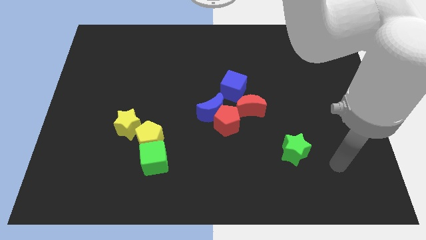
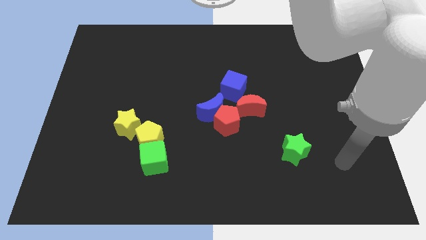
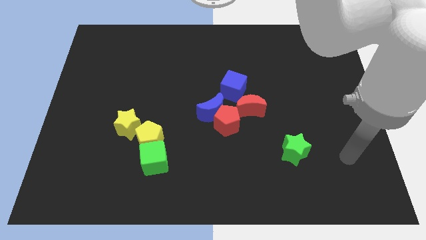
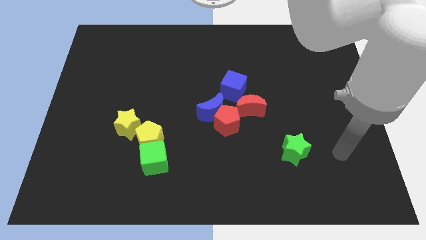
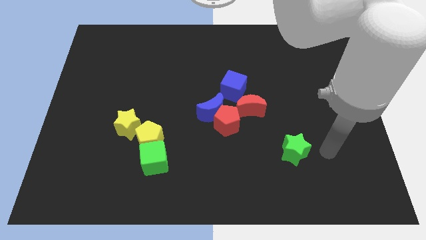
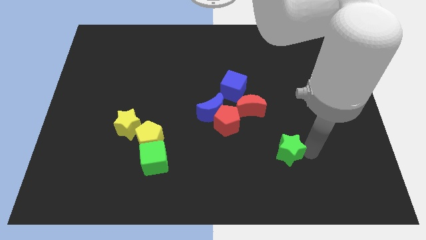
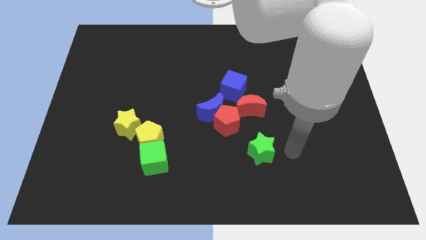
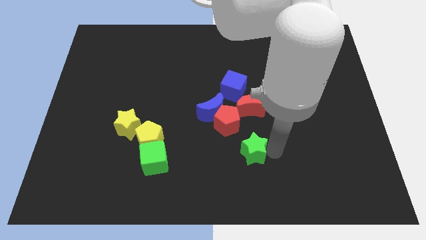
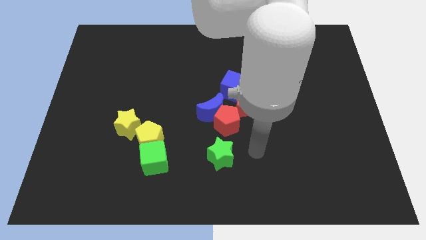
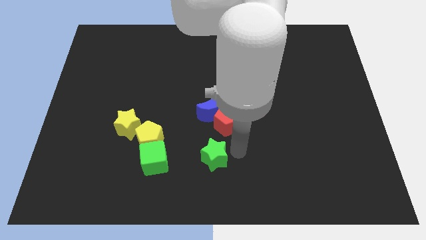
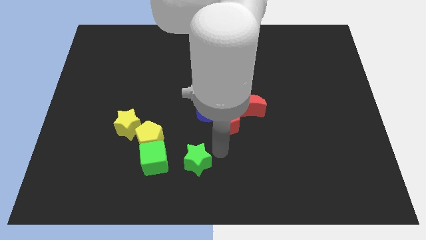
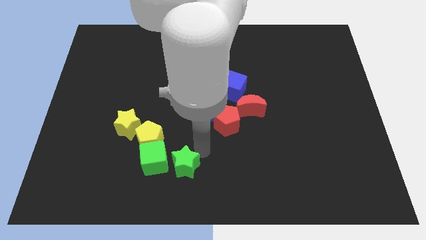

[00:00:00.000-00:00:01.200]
push the green star to the left side of the green cube

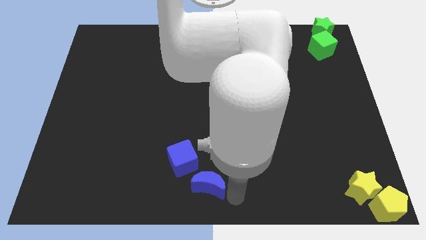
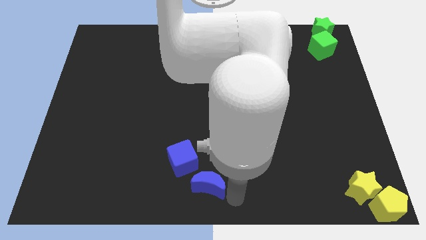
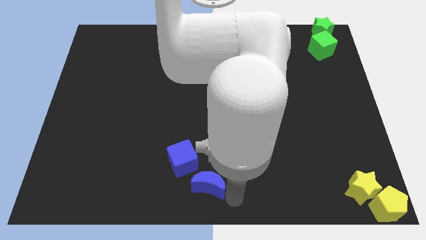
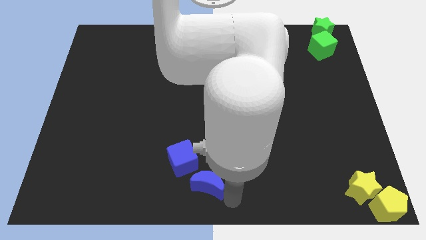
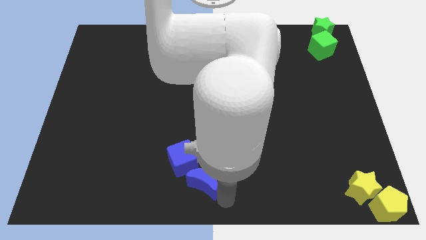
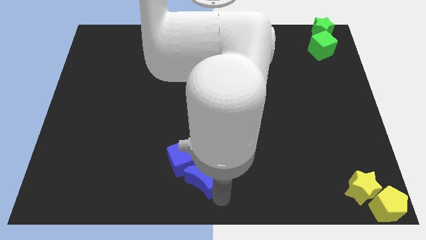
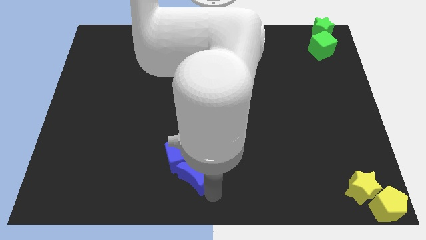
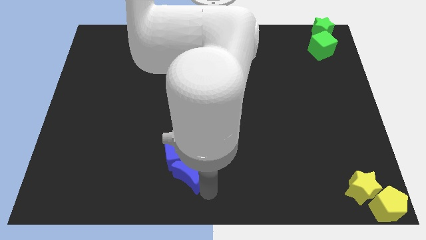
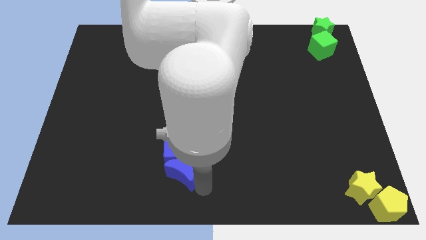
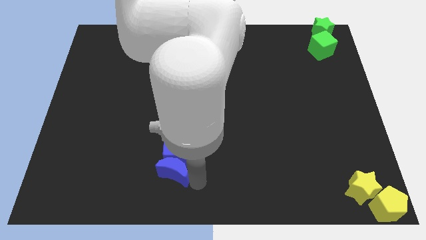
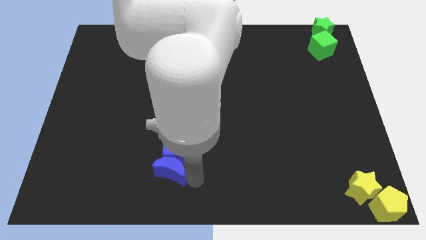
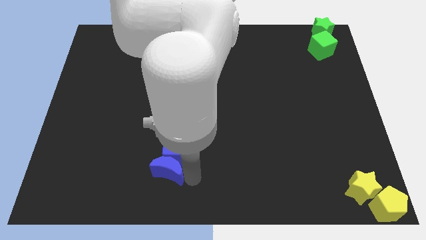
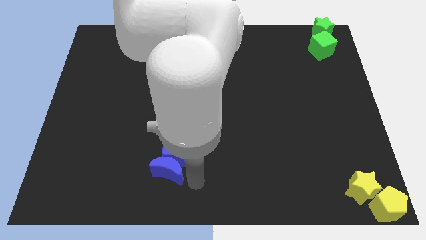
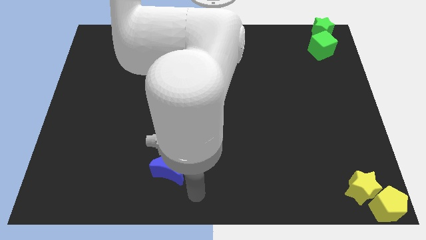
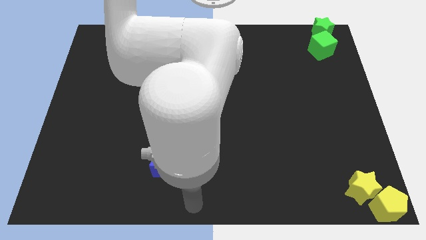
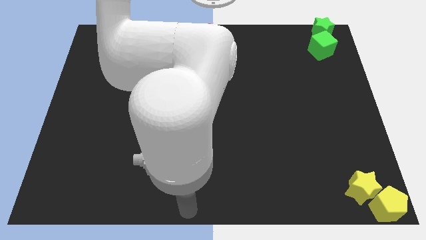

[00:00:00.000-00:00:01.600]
place the blue blocks diagonally to green blocks

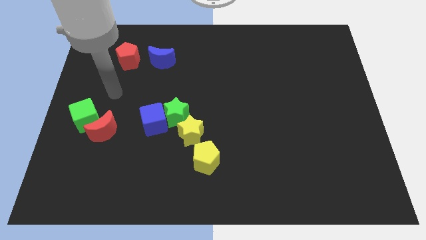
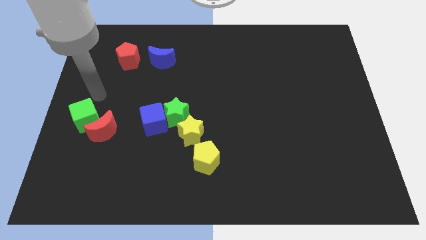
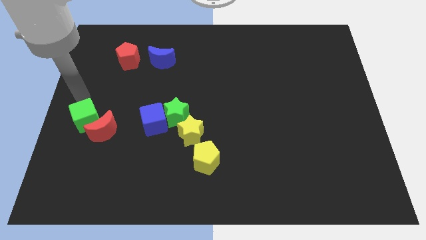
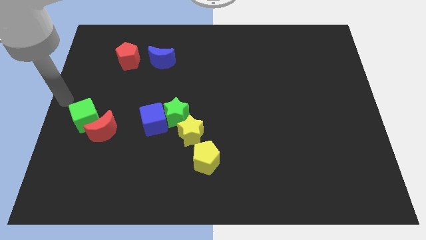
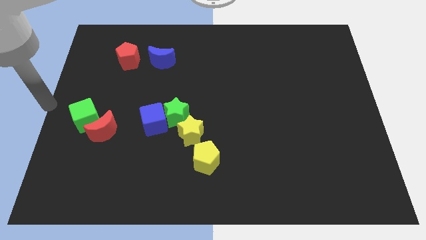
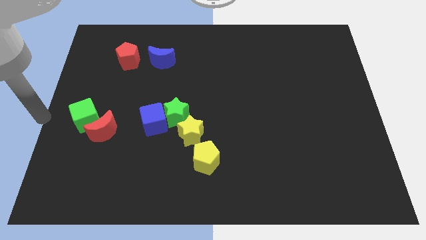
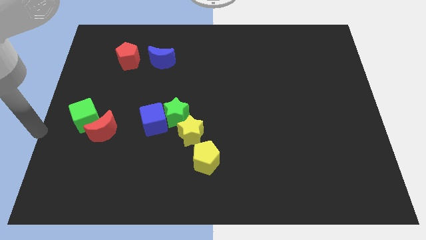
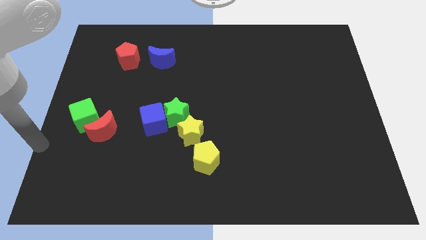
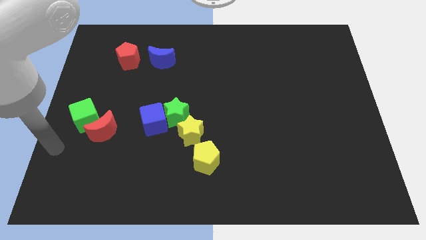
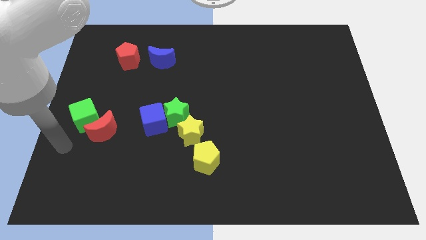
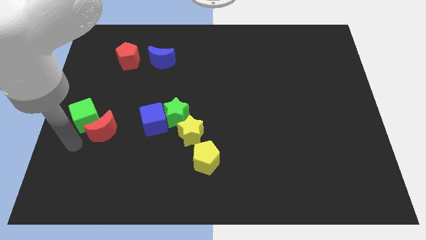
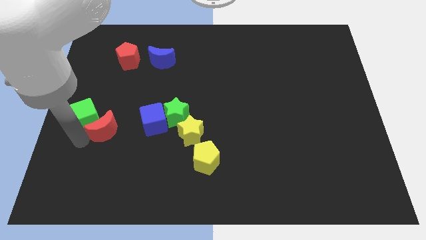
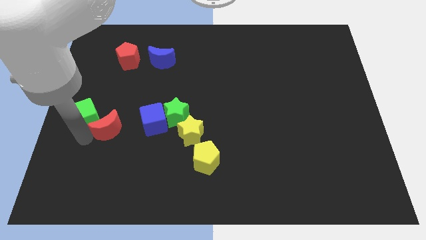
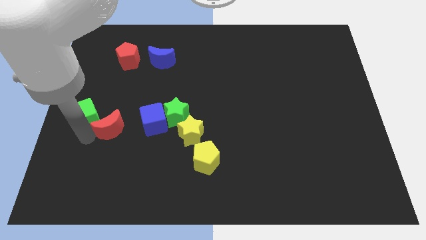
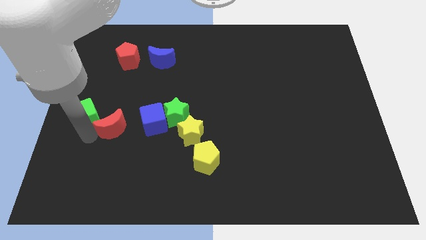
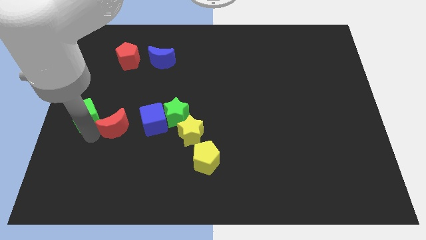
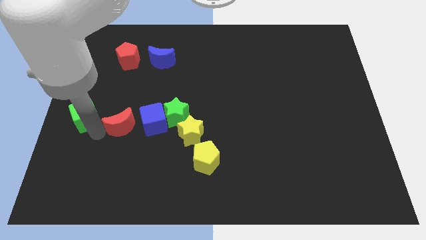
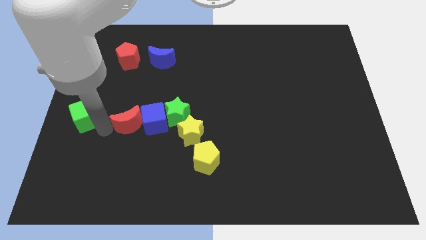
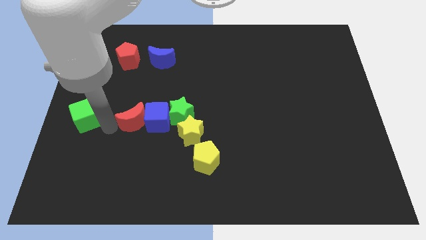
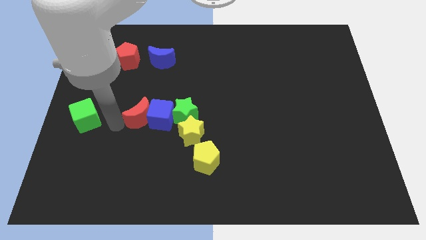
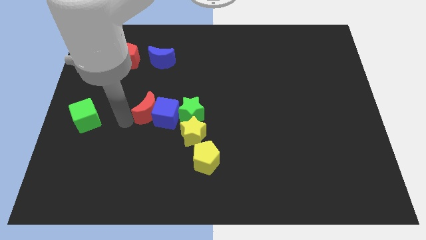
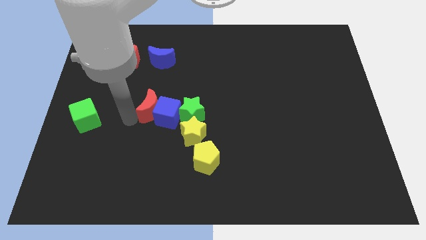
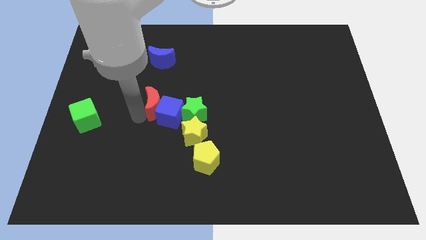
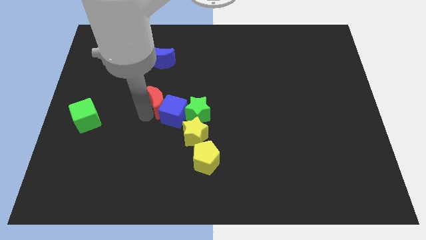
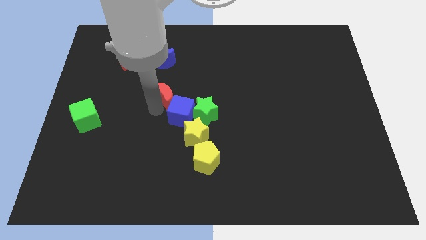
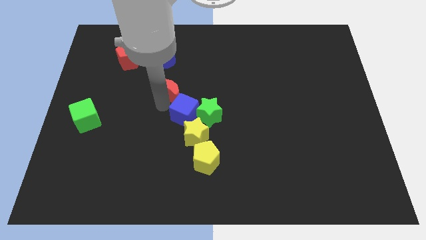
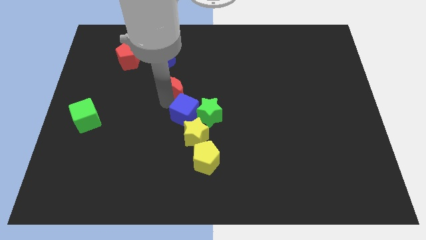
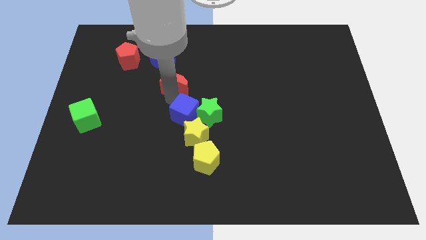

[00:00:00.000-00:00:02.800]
move the red crescent away from the green cube

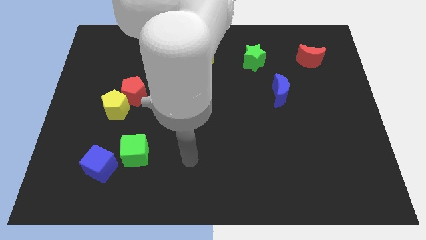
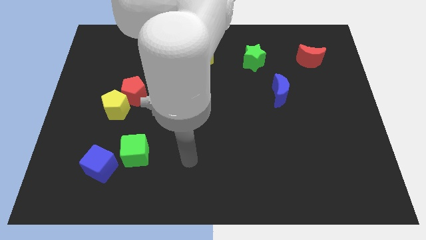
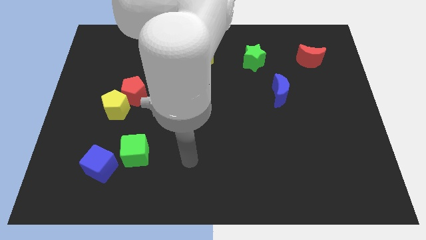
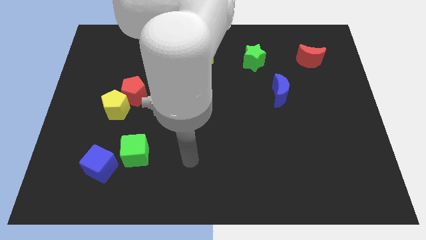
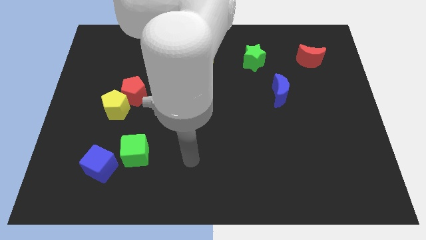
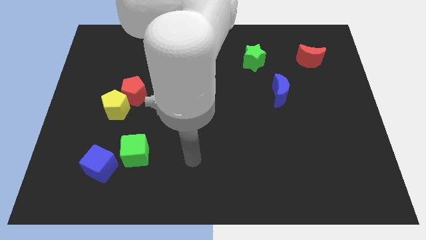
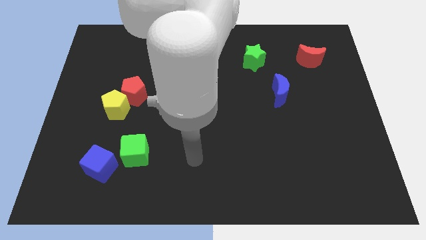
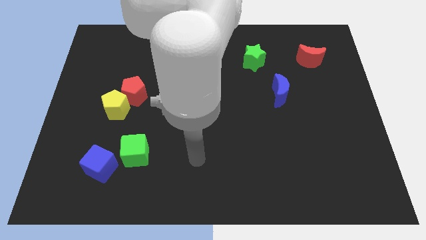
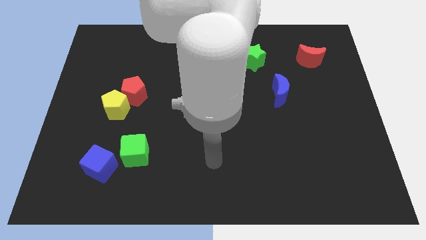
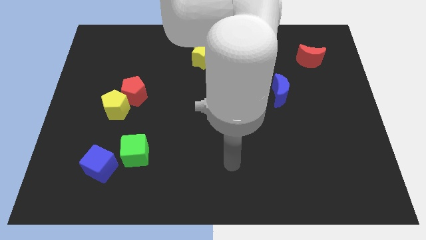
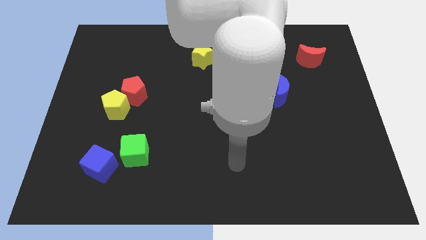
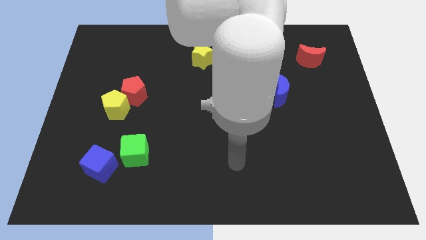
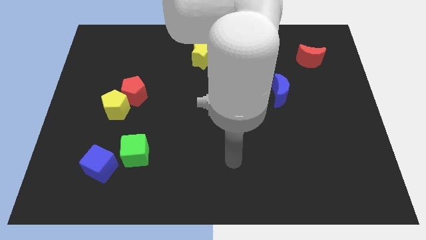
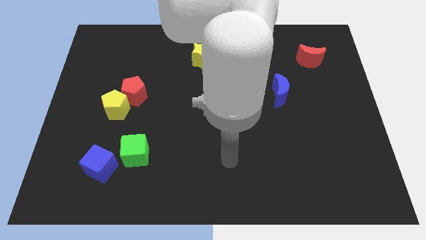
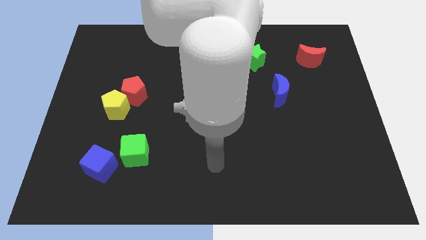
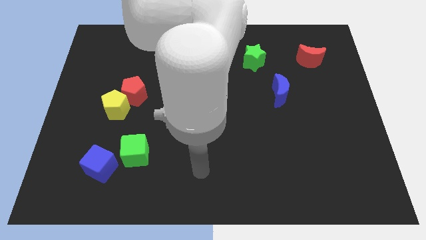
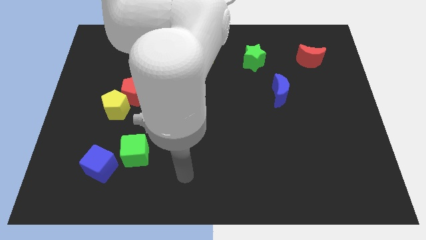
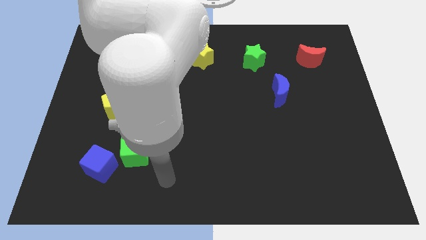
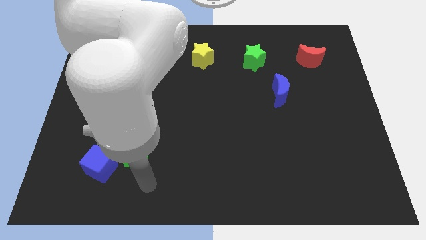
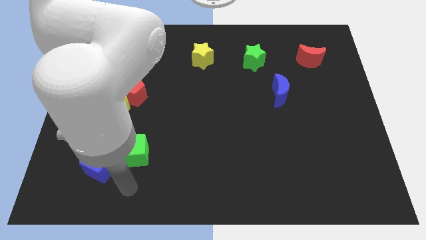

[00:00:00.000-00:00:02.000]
put your hand vertically below the green cube

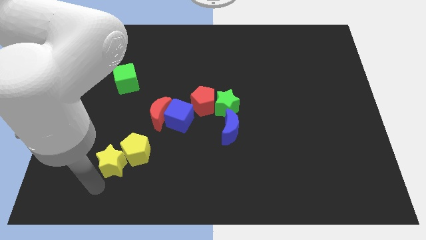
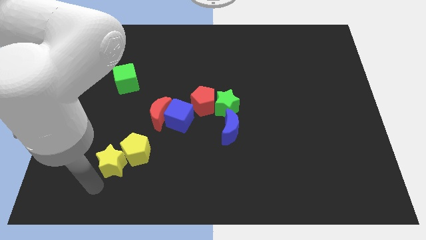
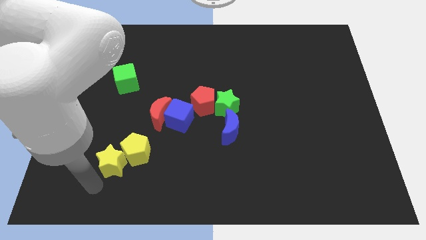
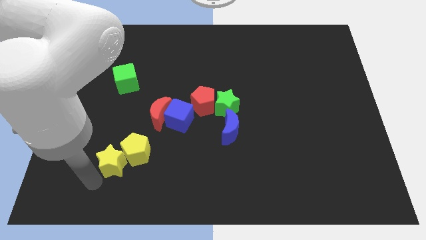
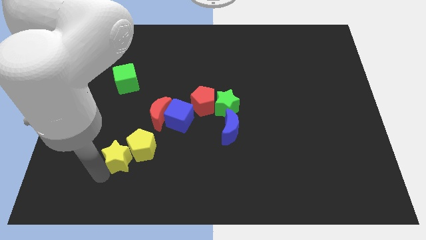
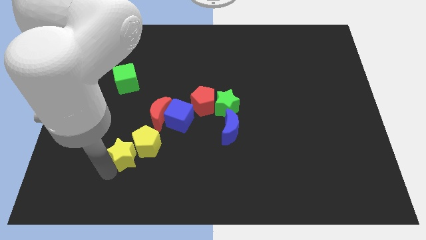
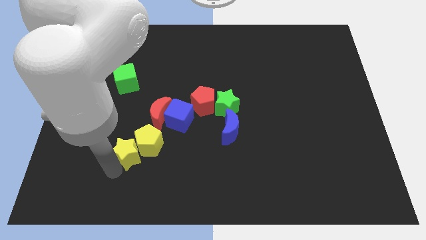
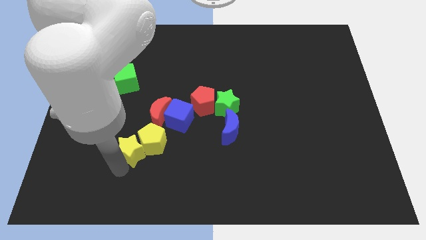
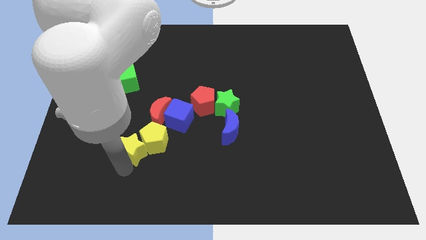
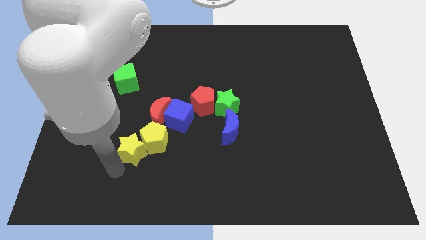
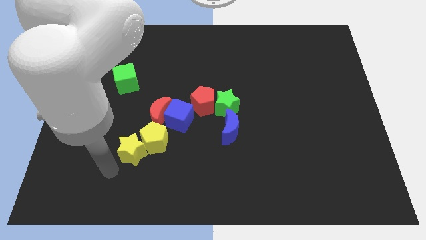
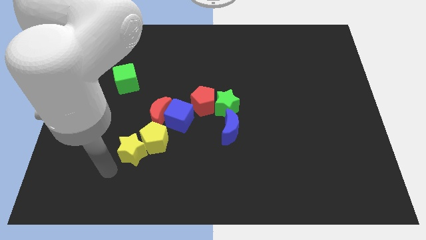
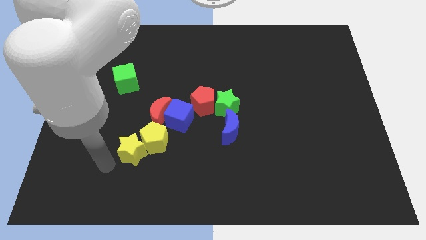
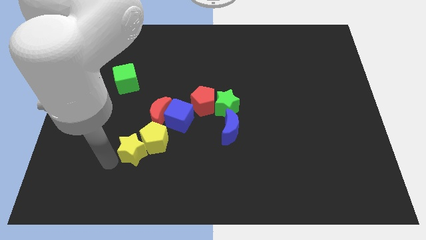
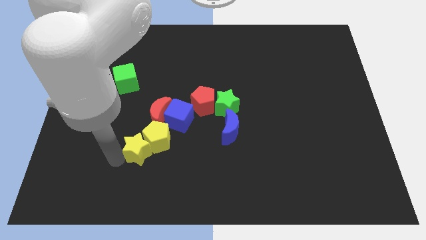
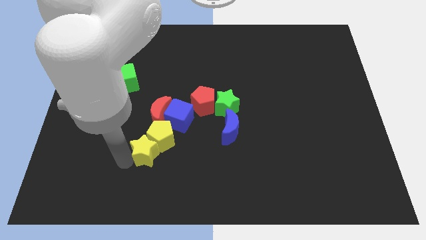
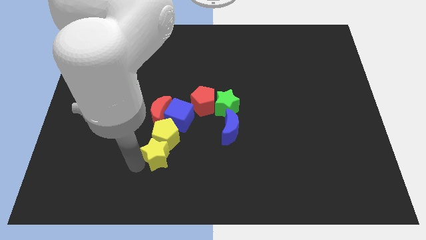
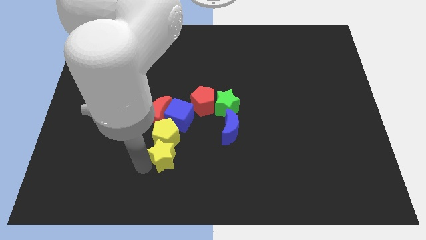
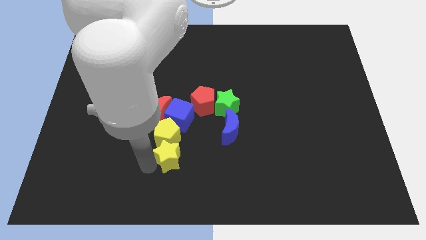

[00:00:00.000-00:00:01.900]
push the yellow blocks near to the group of objects
